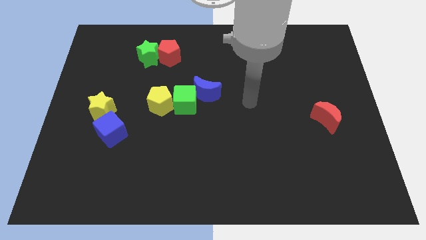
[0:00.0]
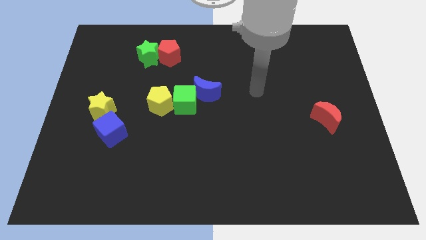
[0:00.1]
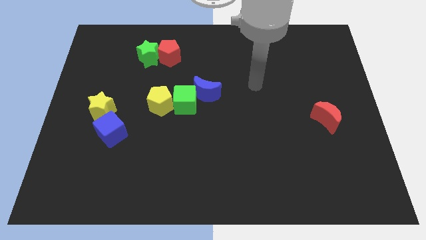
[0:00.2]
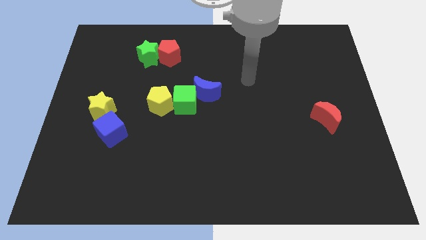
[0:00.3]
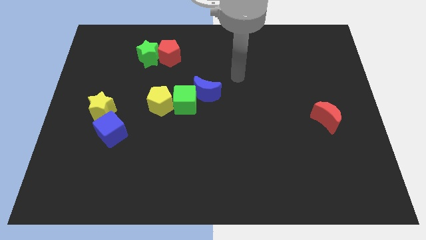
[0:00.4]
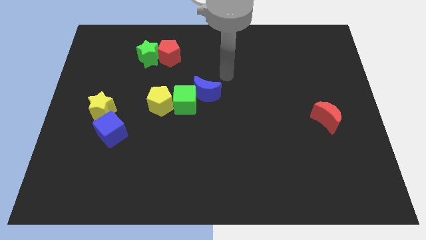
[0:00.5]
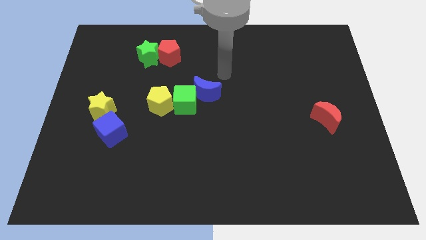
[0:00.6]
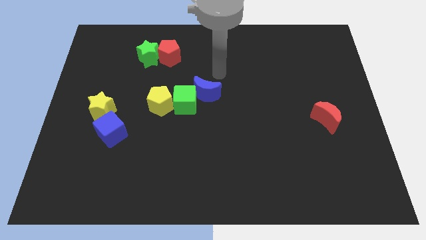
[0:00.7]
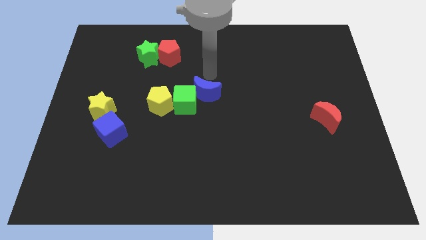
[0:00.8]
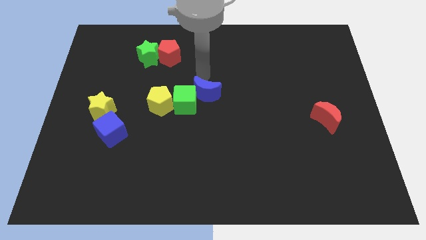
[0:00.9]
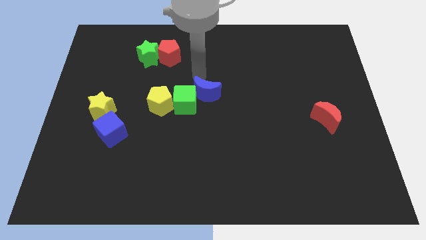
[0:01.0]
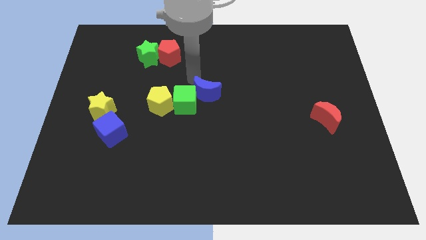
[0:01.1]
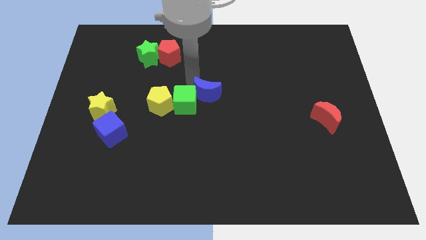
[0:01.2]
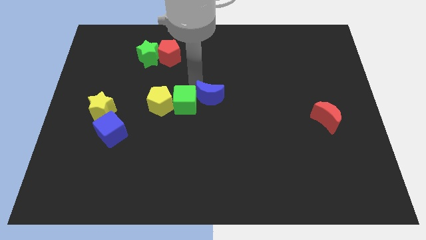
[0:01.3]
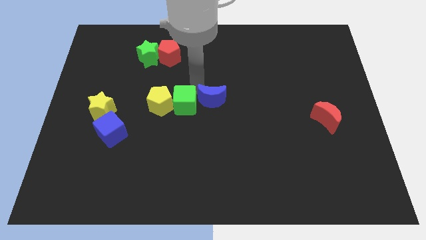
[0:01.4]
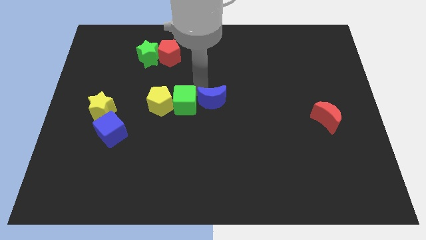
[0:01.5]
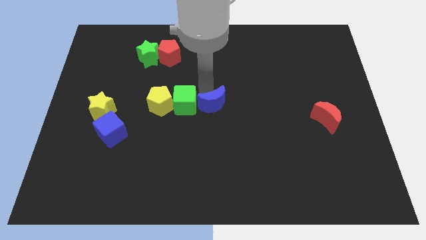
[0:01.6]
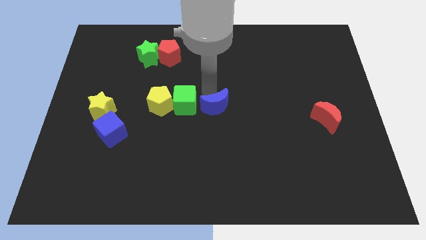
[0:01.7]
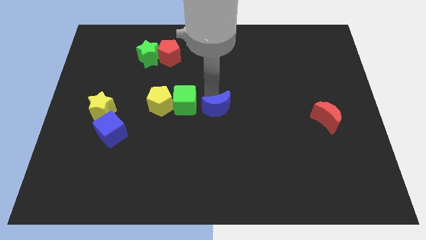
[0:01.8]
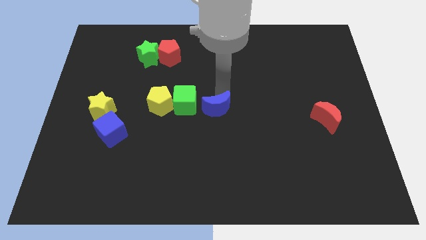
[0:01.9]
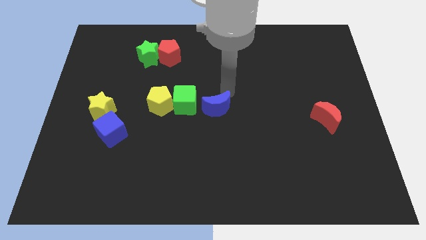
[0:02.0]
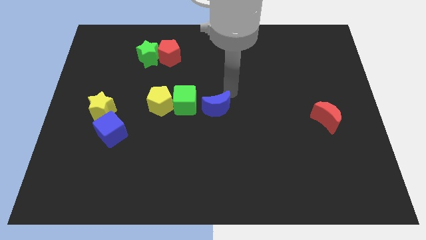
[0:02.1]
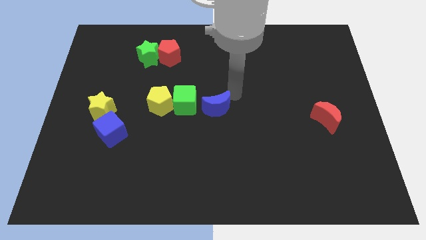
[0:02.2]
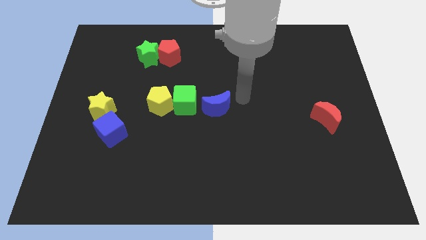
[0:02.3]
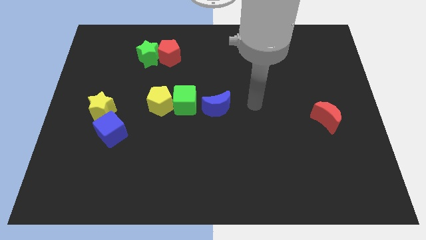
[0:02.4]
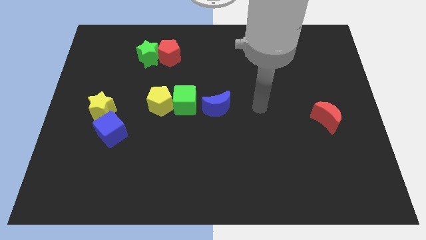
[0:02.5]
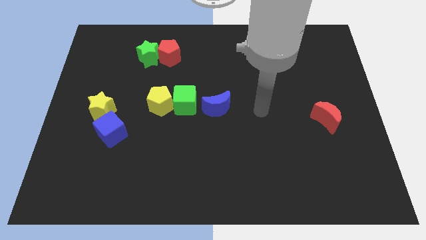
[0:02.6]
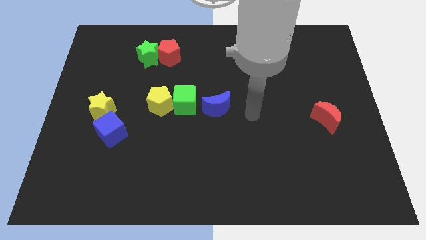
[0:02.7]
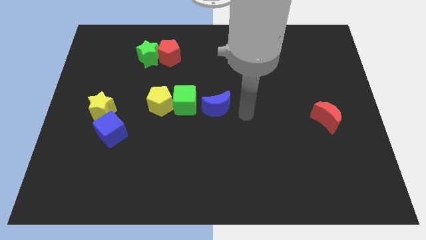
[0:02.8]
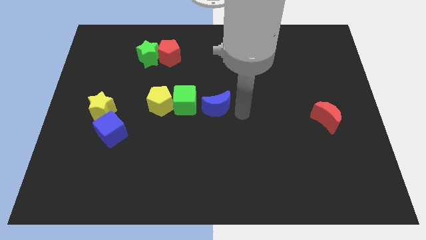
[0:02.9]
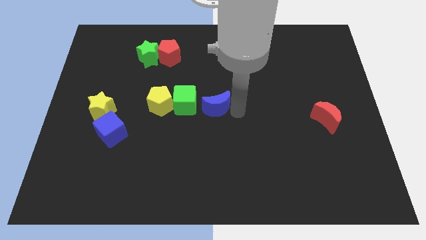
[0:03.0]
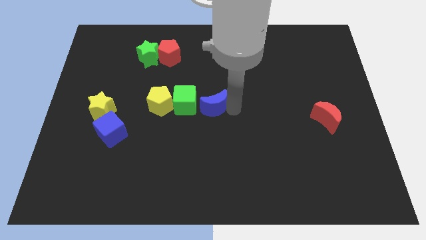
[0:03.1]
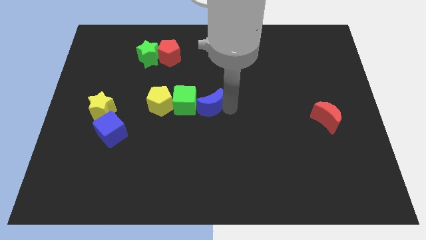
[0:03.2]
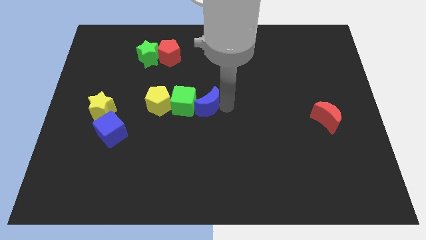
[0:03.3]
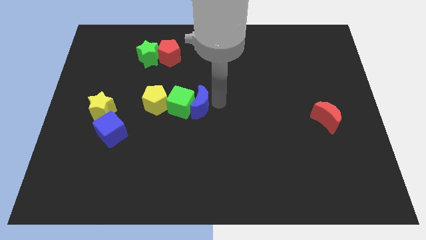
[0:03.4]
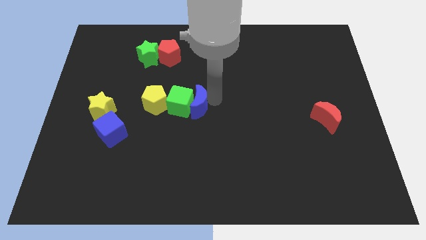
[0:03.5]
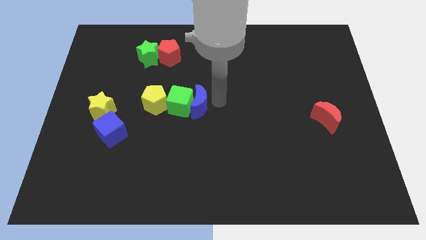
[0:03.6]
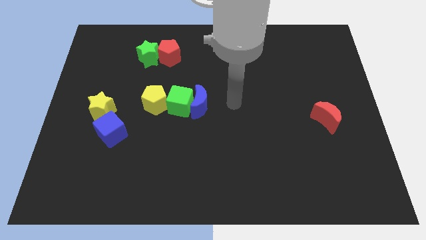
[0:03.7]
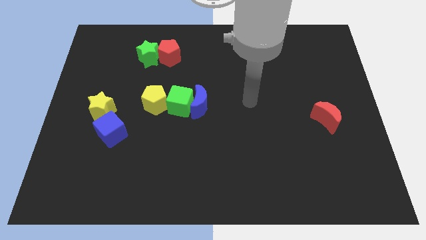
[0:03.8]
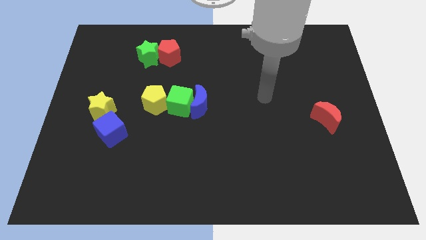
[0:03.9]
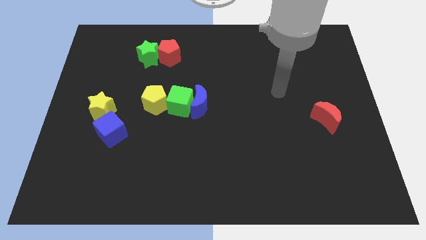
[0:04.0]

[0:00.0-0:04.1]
move blue moon into green cube

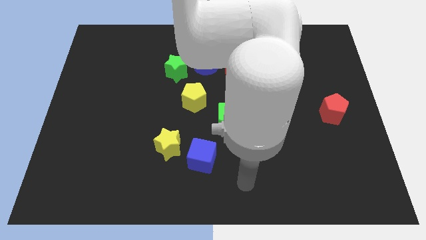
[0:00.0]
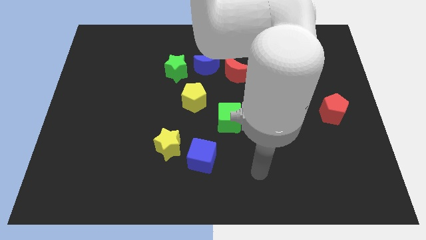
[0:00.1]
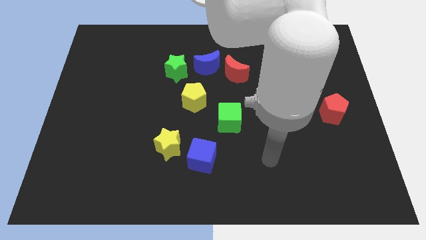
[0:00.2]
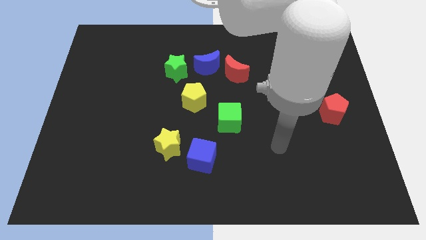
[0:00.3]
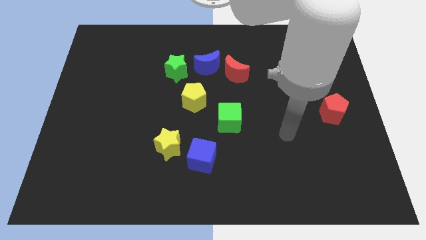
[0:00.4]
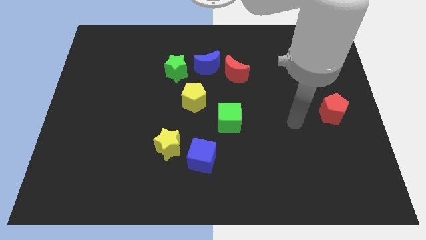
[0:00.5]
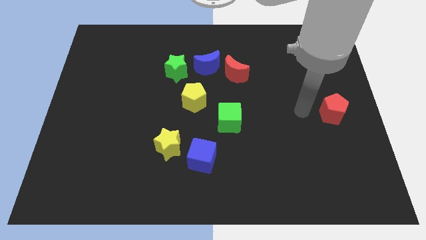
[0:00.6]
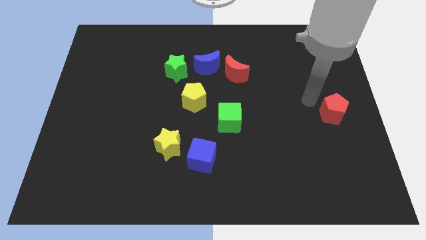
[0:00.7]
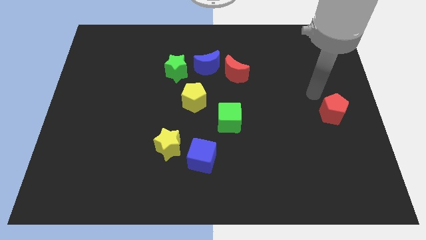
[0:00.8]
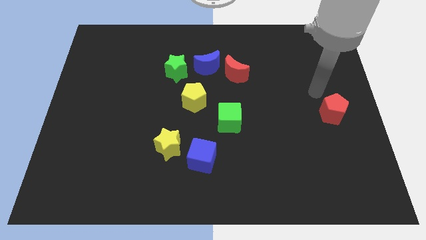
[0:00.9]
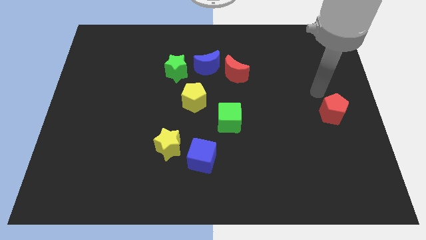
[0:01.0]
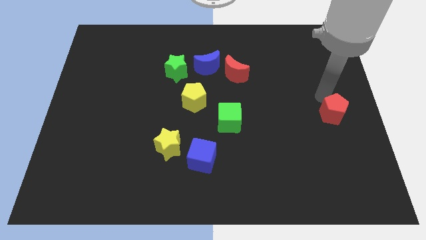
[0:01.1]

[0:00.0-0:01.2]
move your arm to the top of the red pentagon

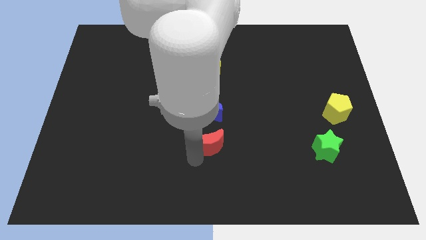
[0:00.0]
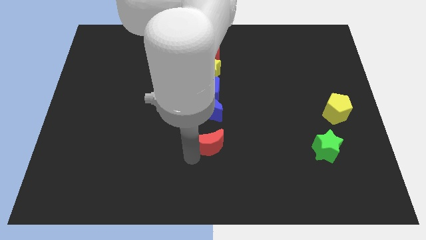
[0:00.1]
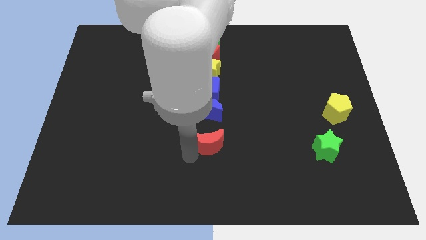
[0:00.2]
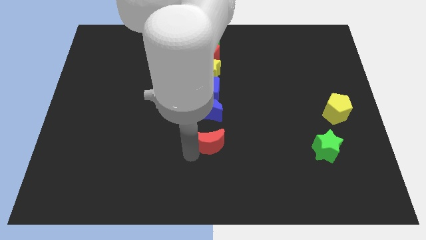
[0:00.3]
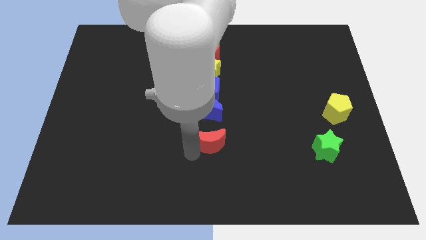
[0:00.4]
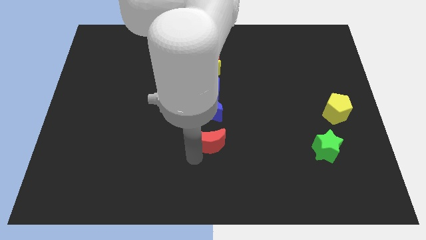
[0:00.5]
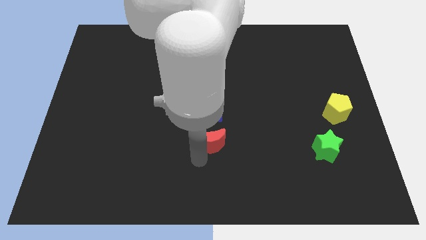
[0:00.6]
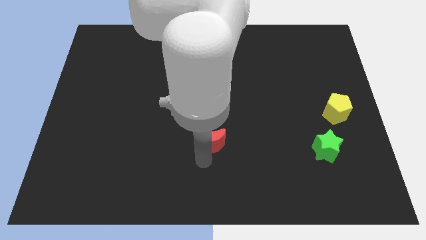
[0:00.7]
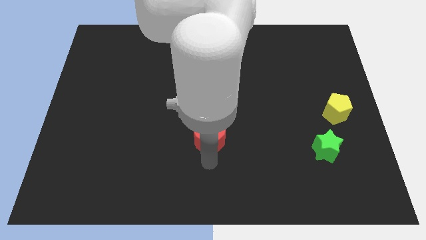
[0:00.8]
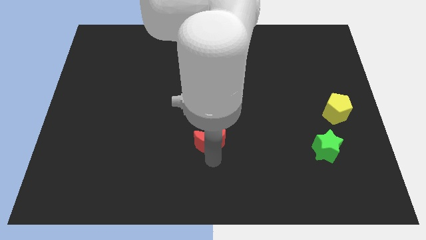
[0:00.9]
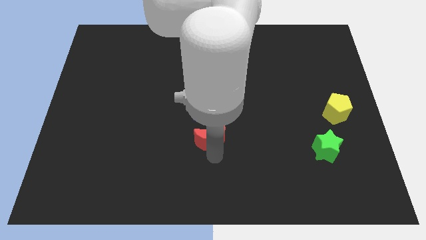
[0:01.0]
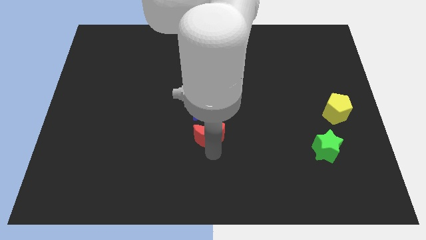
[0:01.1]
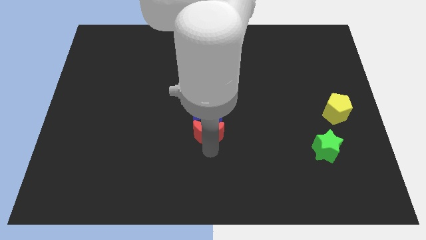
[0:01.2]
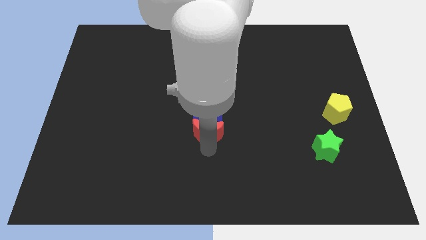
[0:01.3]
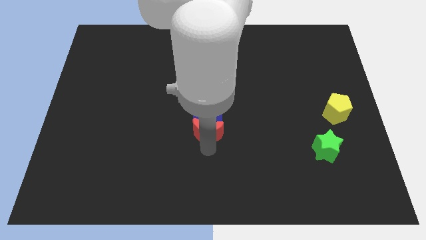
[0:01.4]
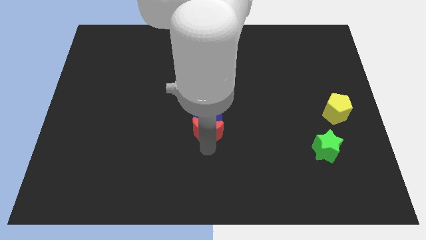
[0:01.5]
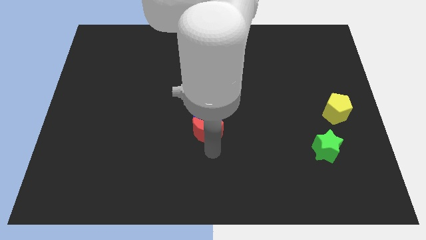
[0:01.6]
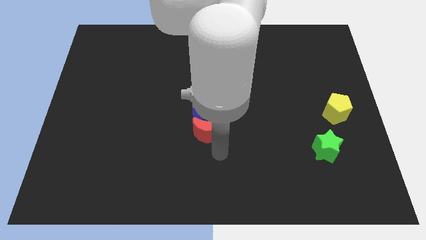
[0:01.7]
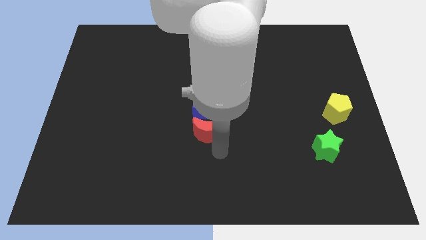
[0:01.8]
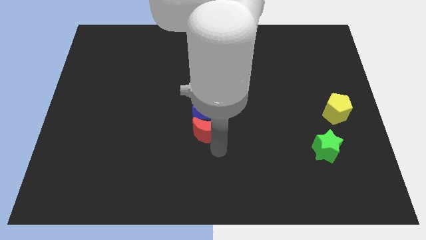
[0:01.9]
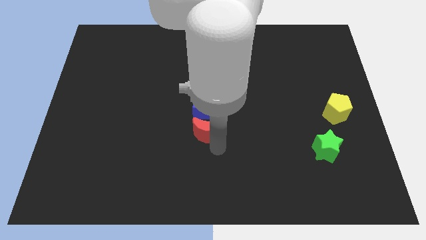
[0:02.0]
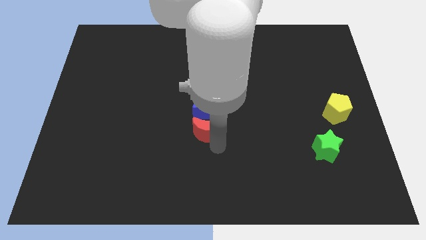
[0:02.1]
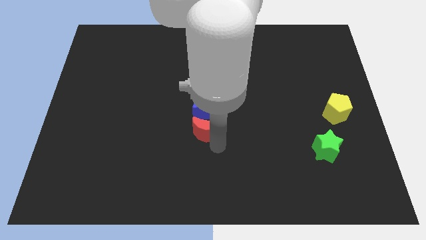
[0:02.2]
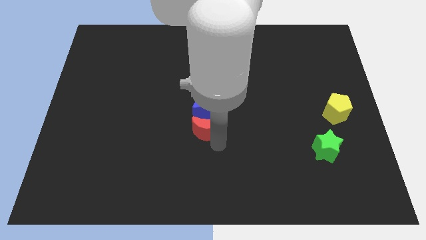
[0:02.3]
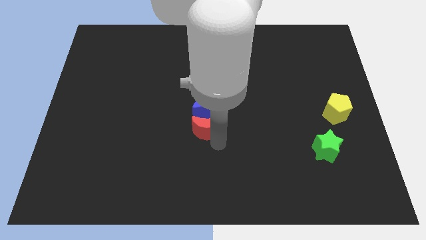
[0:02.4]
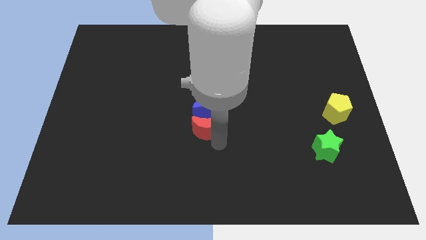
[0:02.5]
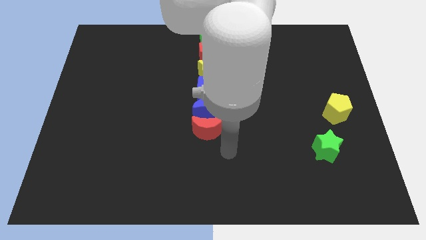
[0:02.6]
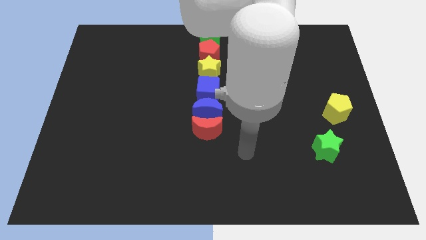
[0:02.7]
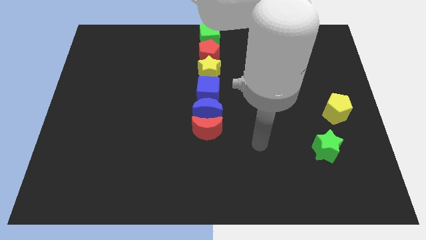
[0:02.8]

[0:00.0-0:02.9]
push the red crescent to the bottom of the blue moon

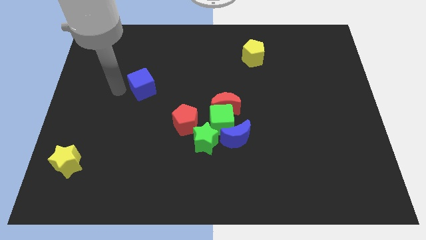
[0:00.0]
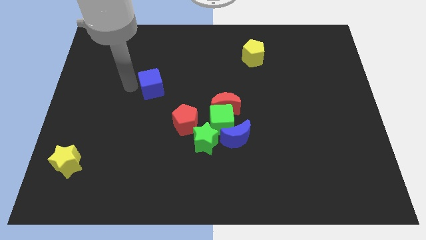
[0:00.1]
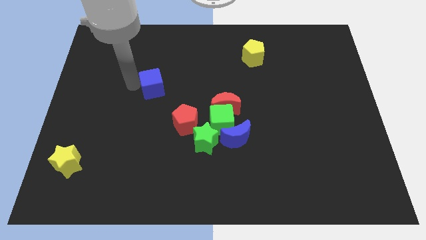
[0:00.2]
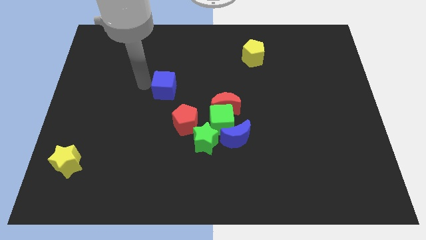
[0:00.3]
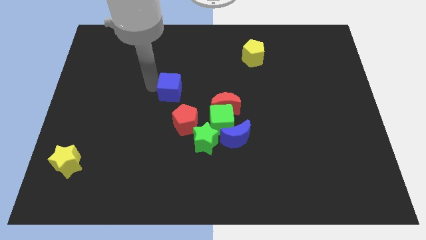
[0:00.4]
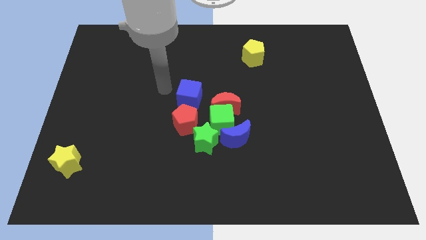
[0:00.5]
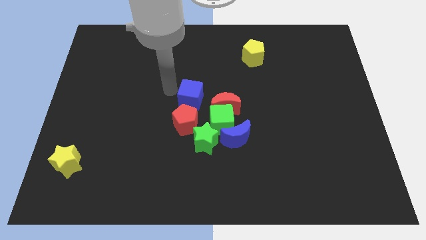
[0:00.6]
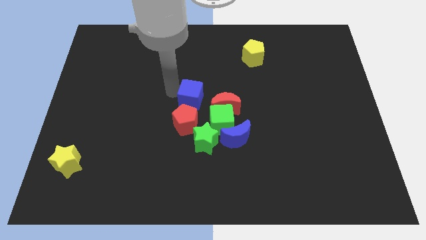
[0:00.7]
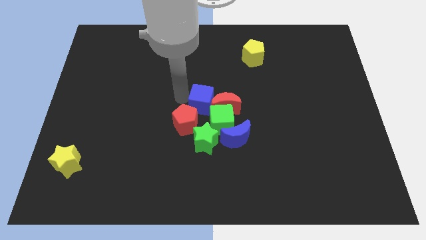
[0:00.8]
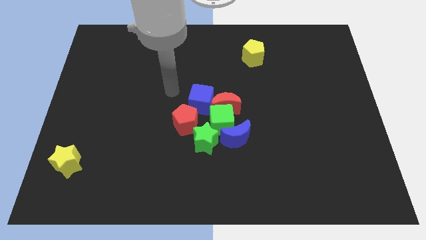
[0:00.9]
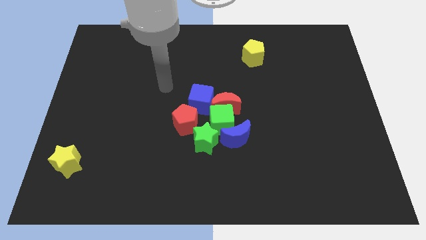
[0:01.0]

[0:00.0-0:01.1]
place blue cube near red crescent
